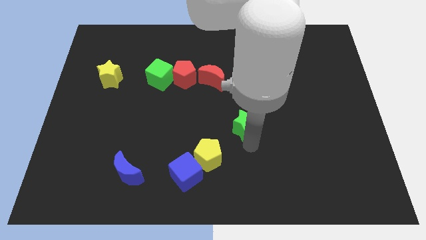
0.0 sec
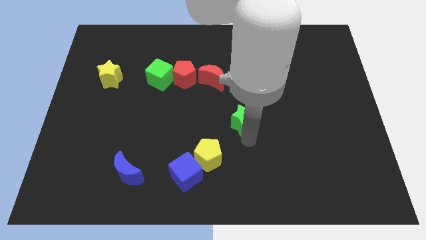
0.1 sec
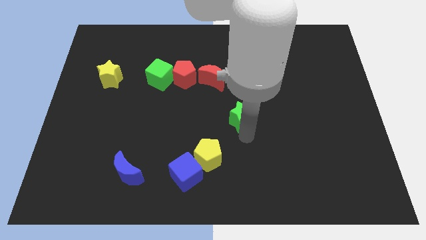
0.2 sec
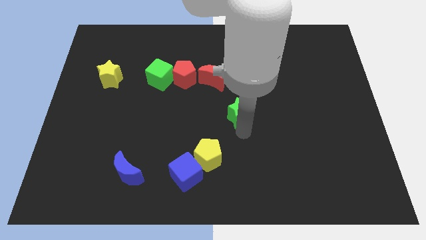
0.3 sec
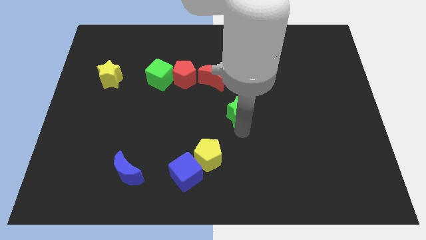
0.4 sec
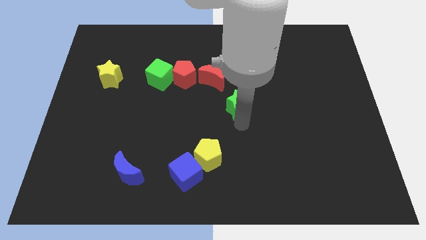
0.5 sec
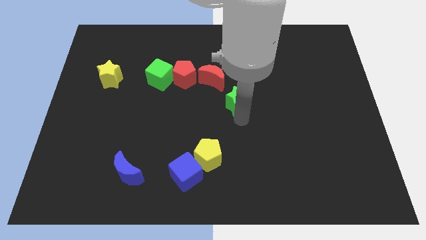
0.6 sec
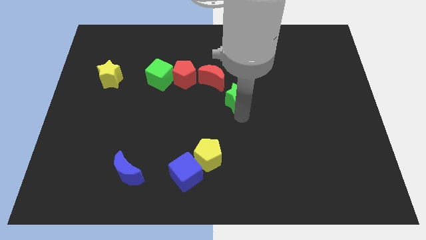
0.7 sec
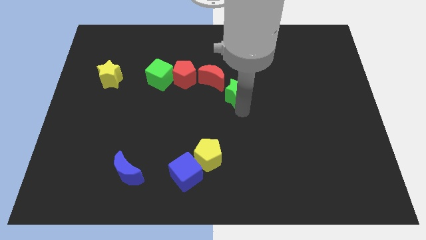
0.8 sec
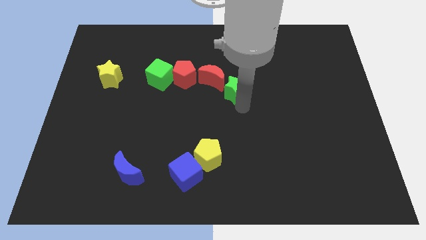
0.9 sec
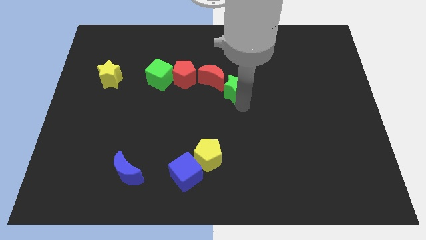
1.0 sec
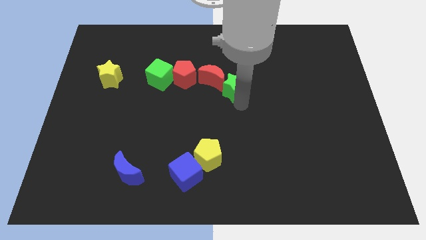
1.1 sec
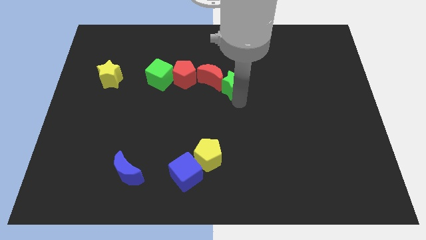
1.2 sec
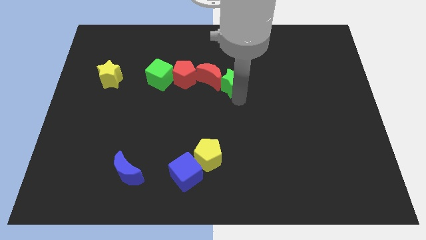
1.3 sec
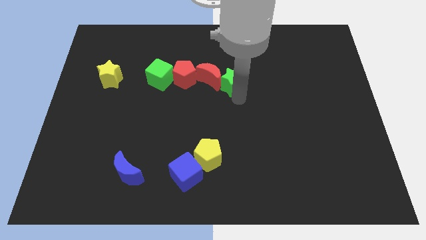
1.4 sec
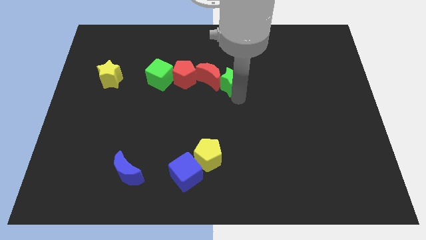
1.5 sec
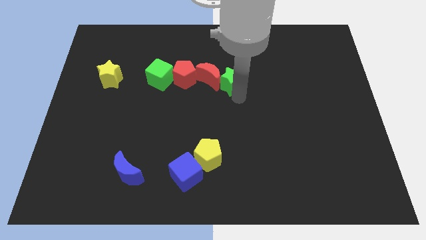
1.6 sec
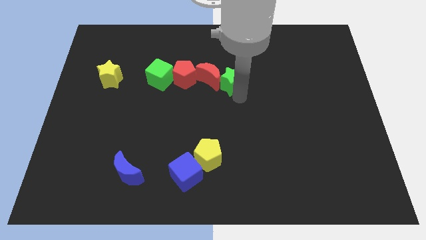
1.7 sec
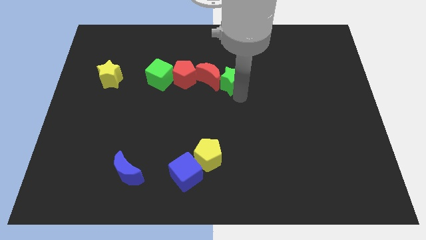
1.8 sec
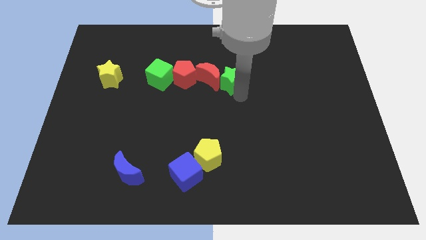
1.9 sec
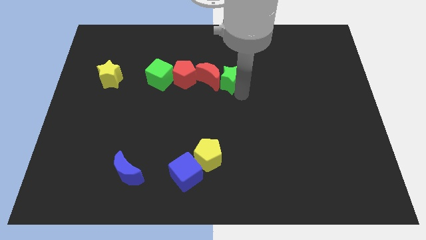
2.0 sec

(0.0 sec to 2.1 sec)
slide green star close to the red moon

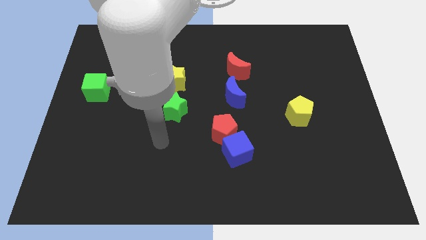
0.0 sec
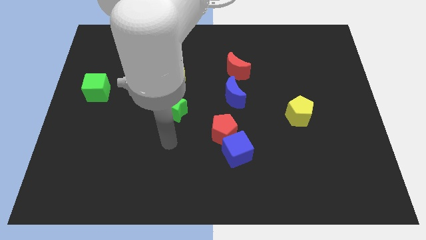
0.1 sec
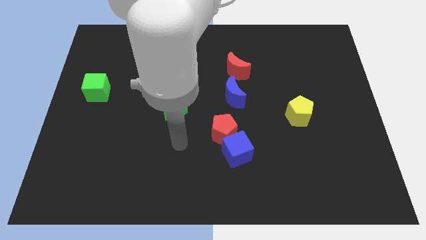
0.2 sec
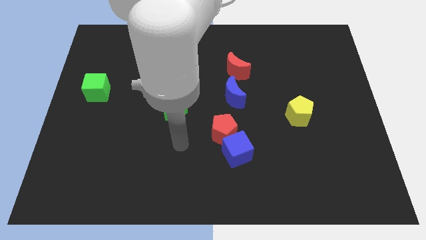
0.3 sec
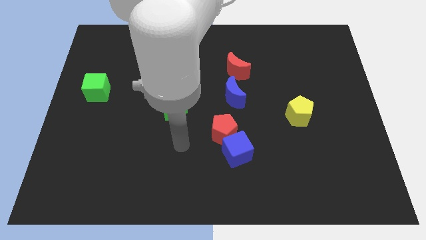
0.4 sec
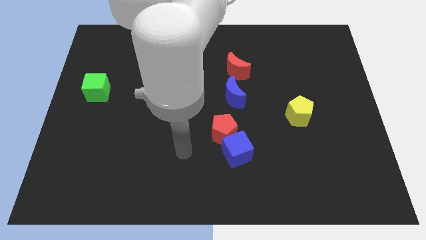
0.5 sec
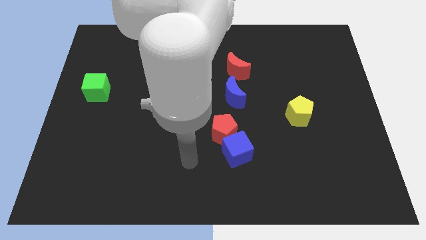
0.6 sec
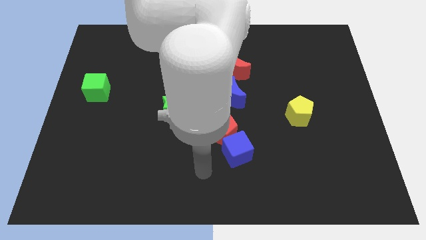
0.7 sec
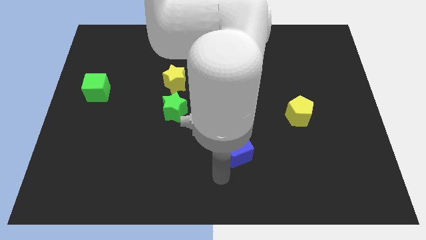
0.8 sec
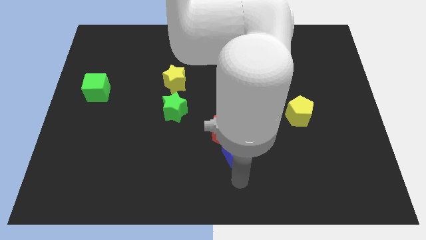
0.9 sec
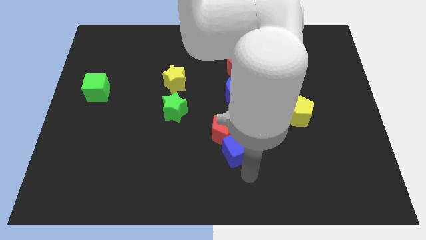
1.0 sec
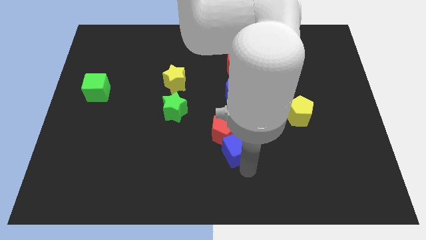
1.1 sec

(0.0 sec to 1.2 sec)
touch the bottom side of the blue cube

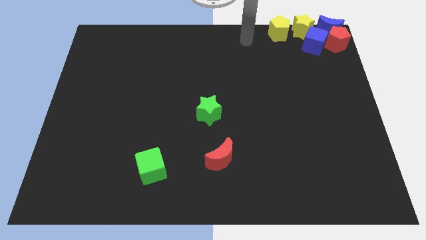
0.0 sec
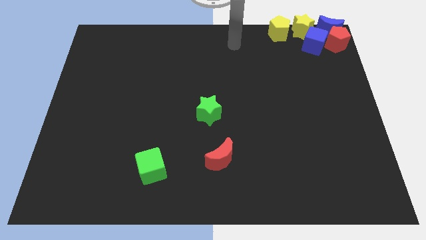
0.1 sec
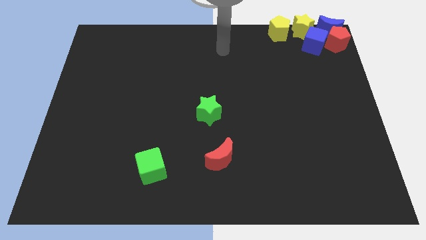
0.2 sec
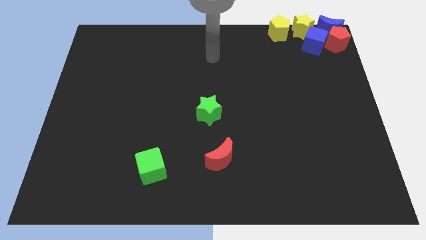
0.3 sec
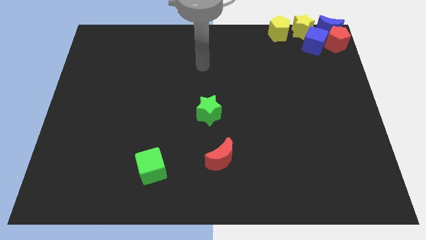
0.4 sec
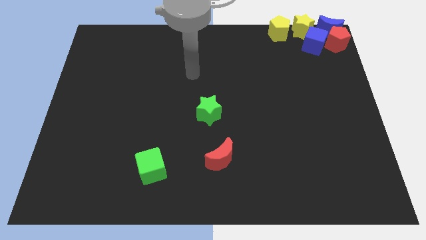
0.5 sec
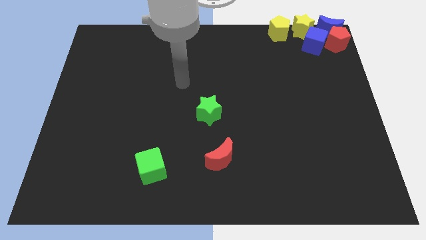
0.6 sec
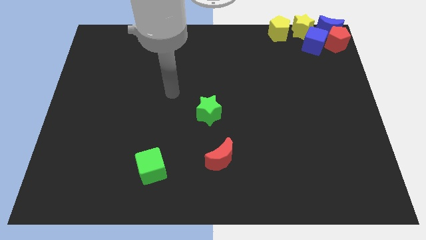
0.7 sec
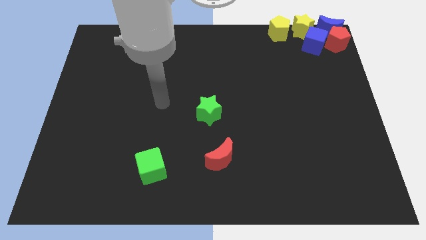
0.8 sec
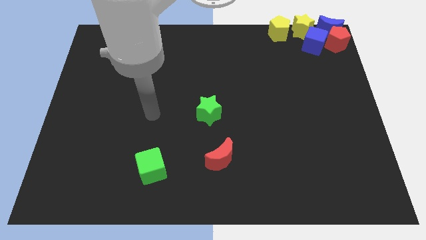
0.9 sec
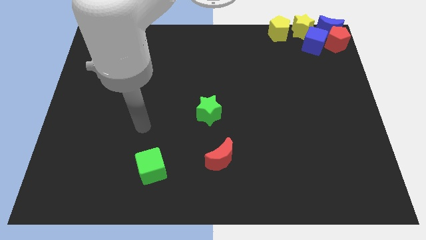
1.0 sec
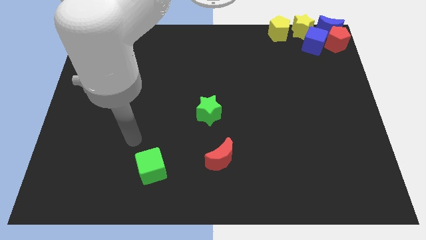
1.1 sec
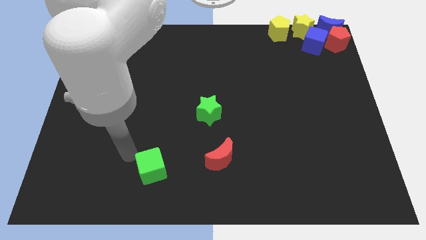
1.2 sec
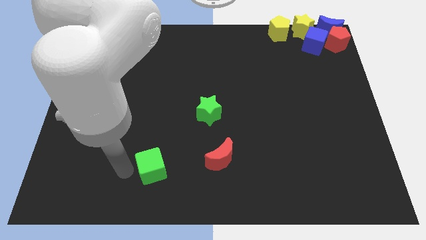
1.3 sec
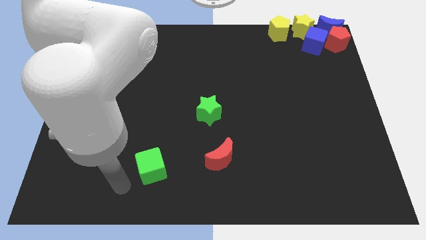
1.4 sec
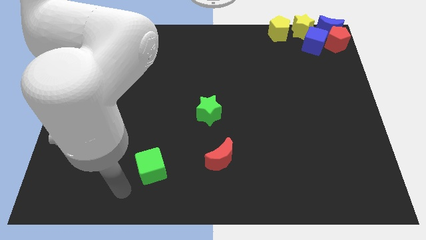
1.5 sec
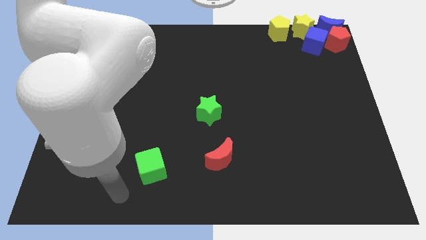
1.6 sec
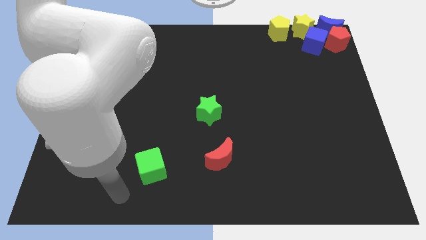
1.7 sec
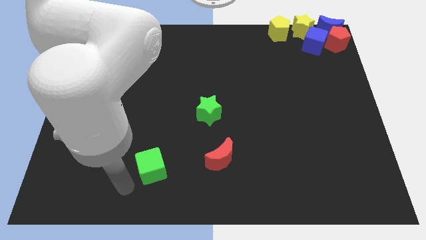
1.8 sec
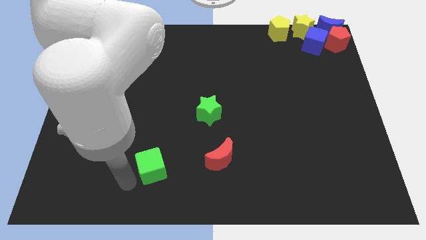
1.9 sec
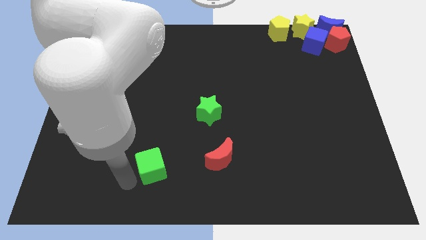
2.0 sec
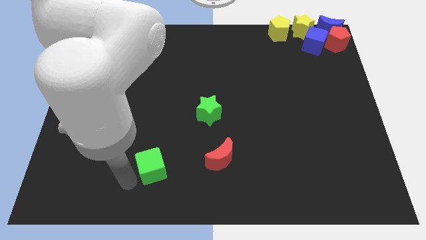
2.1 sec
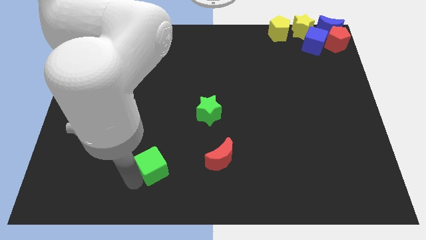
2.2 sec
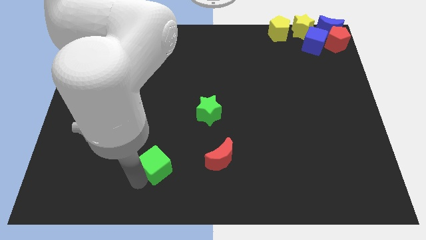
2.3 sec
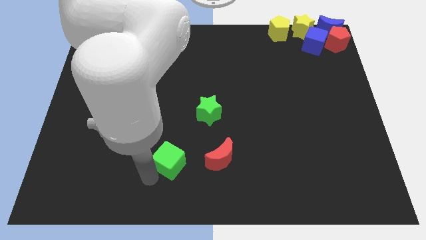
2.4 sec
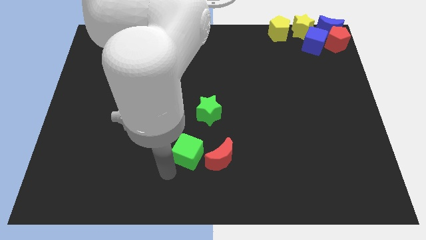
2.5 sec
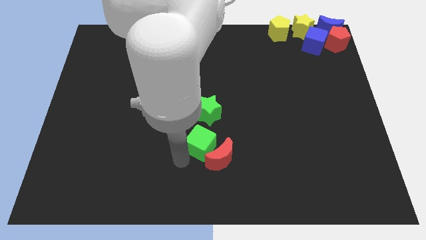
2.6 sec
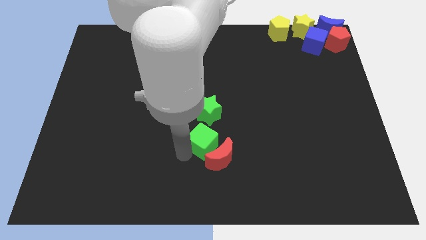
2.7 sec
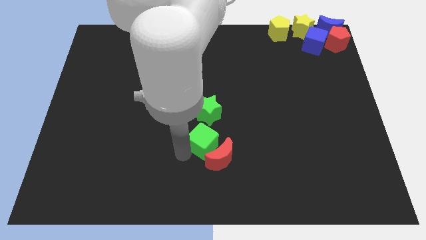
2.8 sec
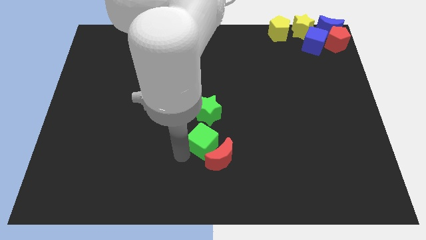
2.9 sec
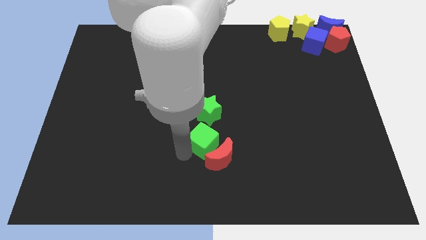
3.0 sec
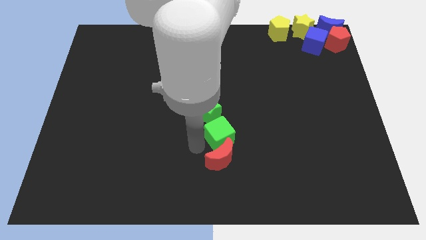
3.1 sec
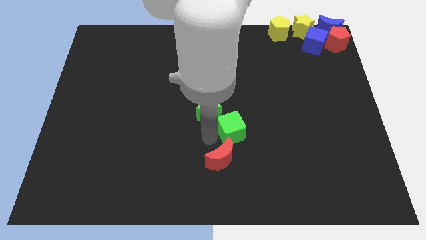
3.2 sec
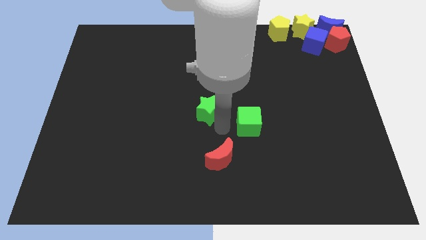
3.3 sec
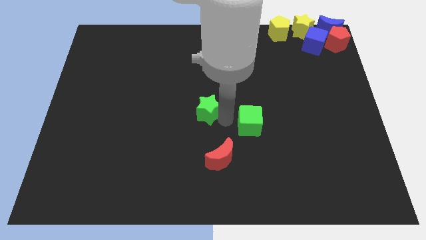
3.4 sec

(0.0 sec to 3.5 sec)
place the green cube at the top right side of the red crescent

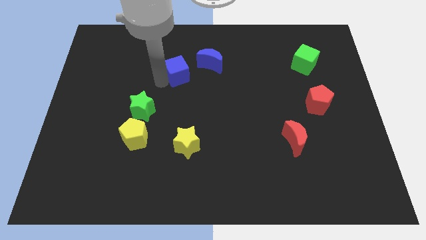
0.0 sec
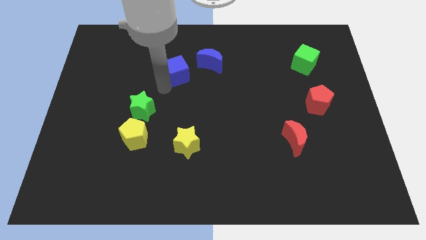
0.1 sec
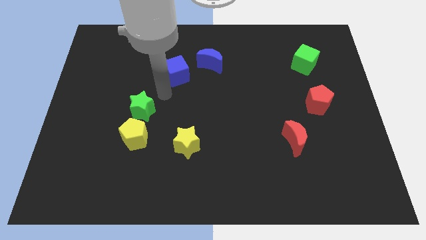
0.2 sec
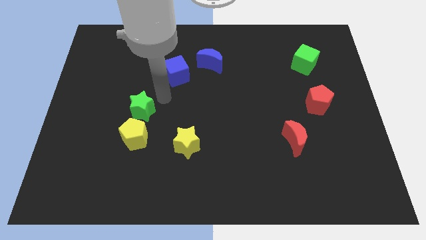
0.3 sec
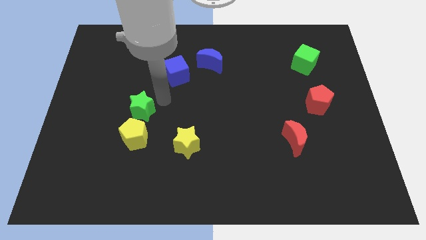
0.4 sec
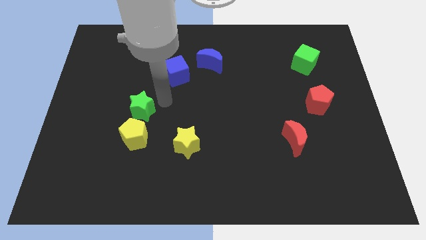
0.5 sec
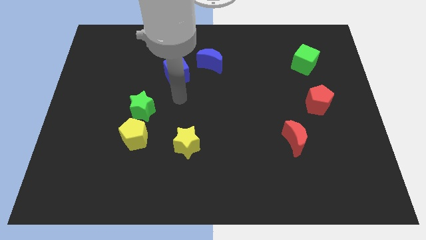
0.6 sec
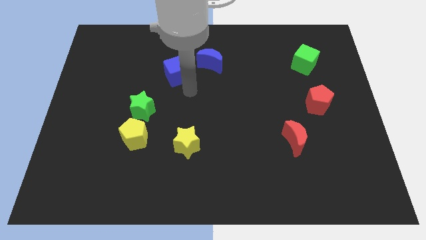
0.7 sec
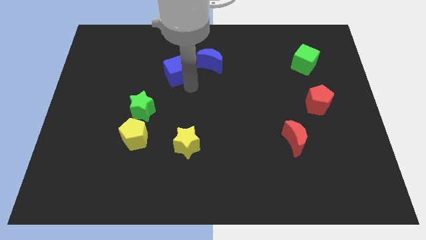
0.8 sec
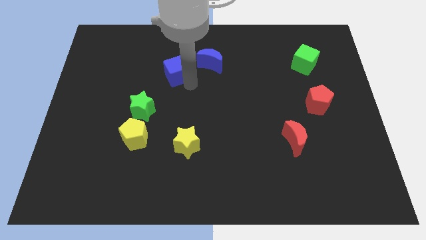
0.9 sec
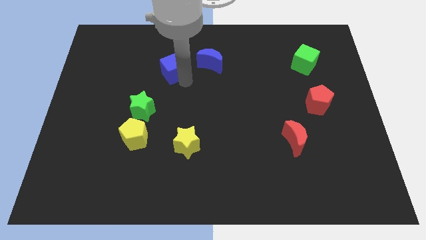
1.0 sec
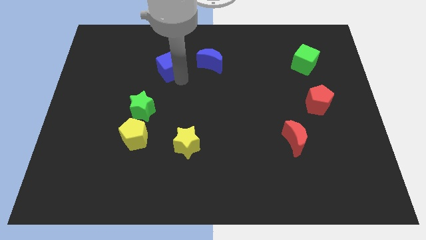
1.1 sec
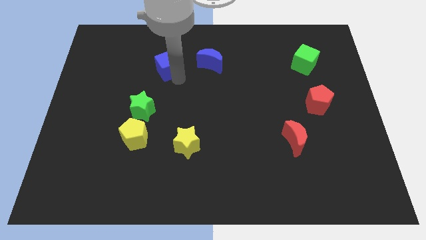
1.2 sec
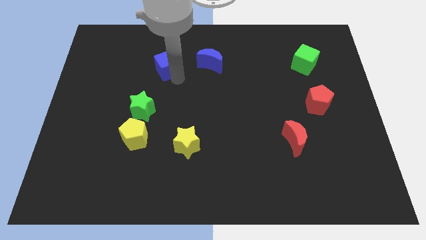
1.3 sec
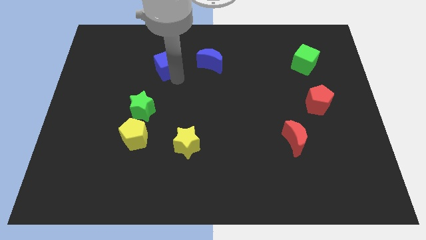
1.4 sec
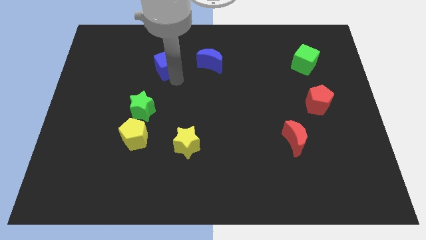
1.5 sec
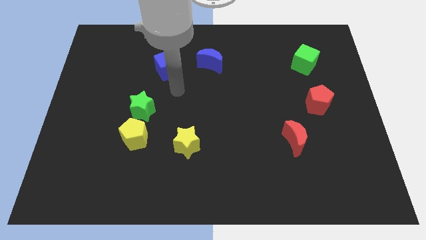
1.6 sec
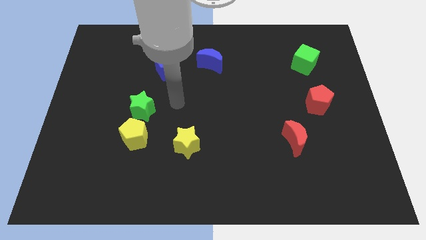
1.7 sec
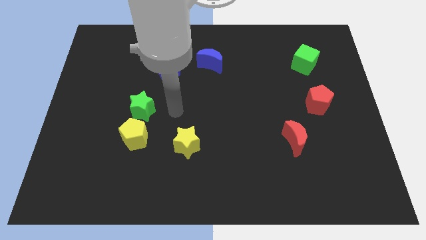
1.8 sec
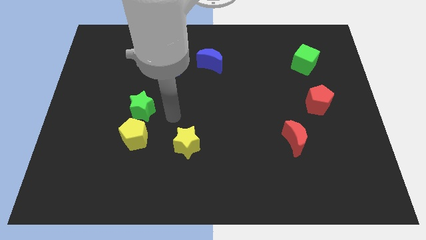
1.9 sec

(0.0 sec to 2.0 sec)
place the blue cube to the left of the blue moon

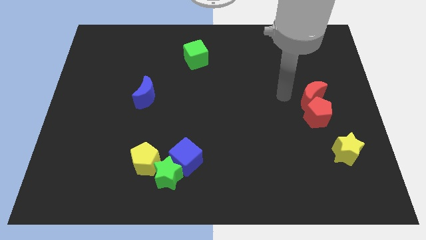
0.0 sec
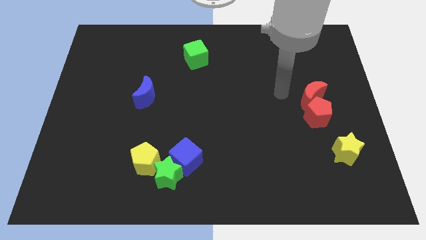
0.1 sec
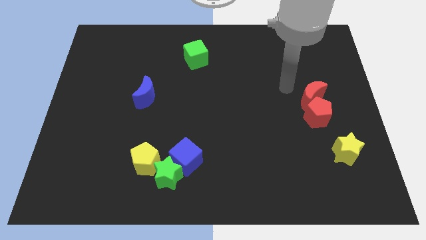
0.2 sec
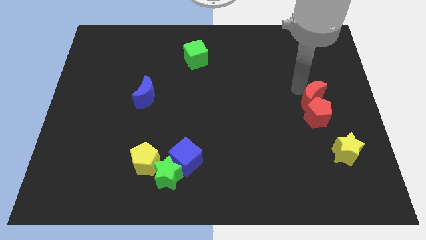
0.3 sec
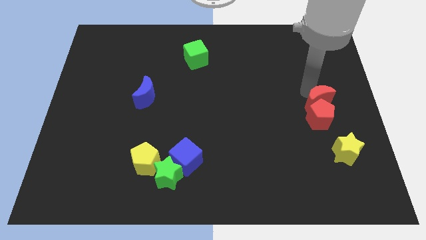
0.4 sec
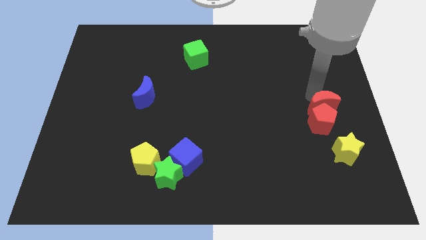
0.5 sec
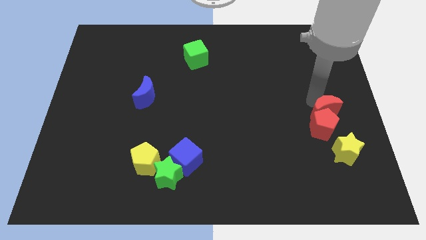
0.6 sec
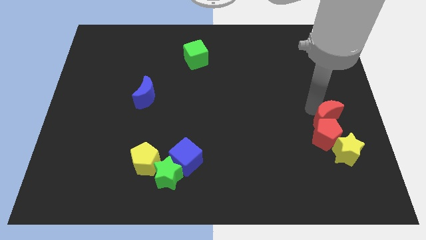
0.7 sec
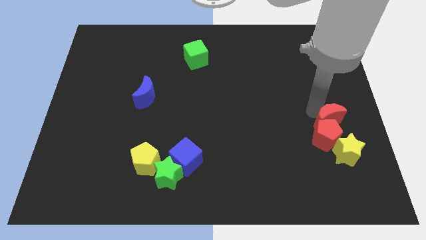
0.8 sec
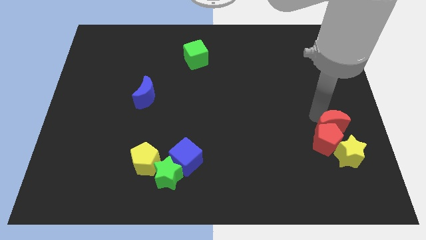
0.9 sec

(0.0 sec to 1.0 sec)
push the red blocks slightly to the bottom
